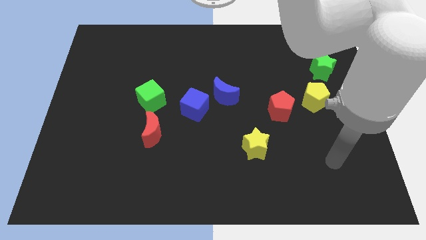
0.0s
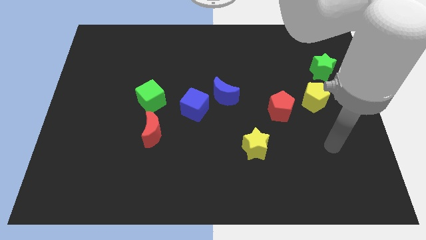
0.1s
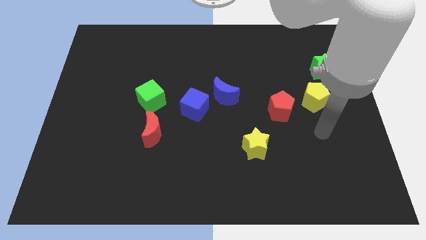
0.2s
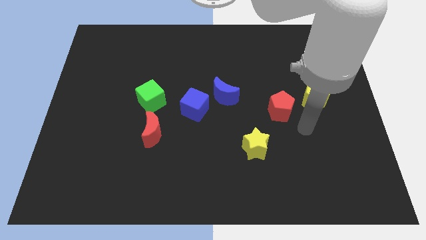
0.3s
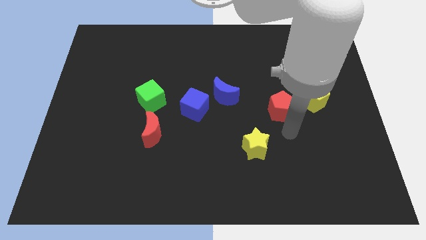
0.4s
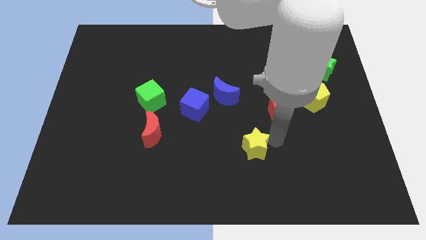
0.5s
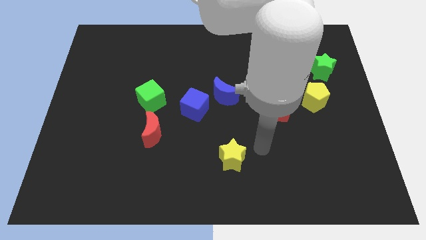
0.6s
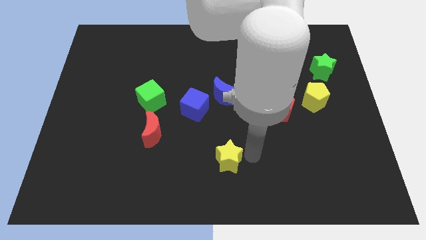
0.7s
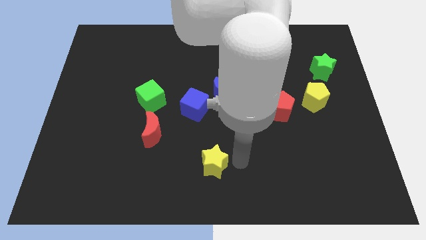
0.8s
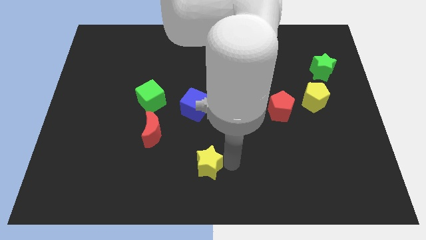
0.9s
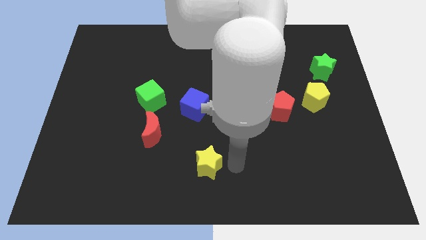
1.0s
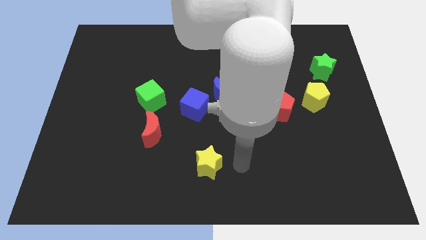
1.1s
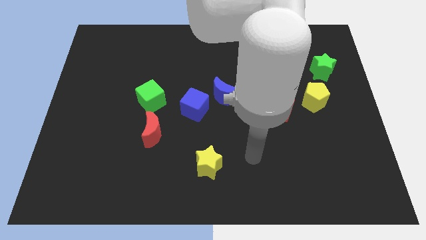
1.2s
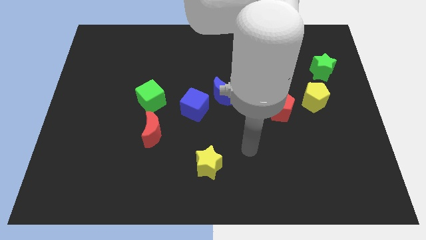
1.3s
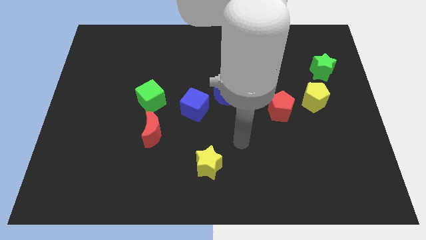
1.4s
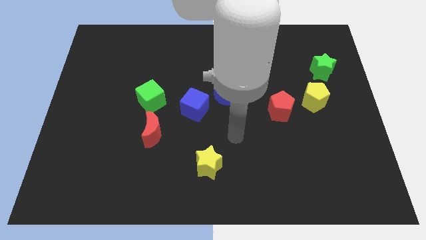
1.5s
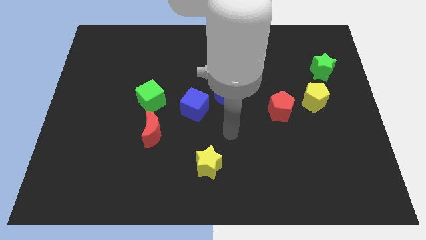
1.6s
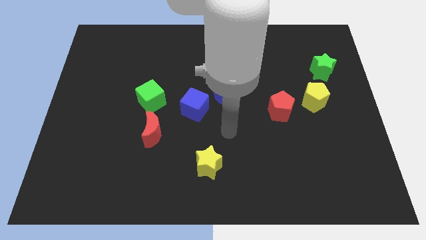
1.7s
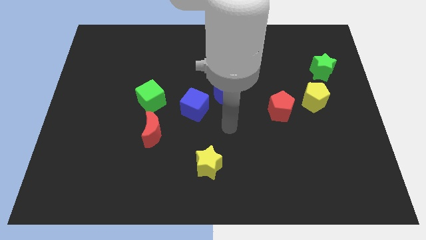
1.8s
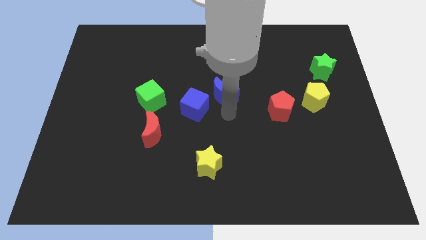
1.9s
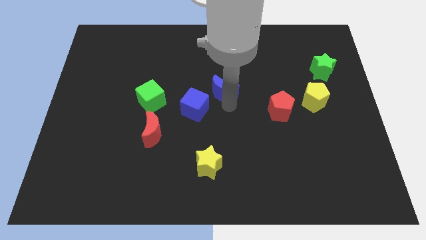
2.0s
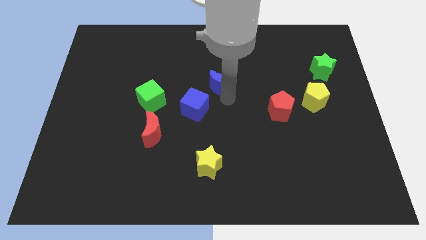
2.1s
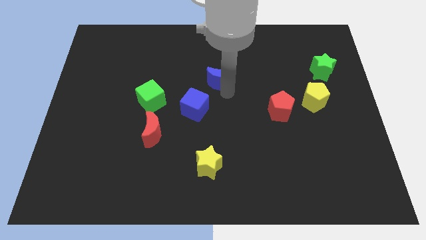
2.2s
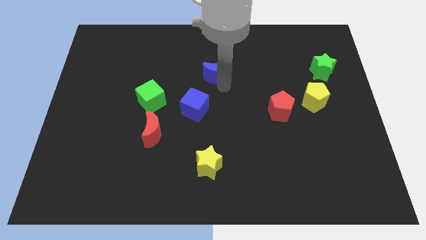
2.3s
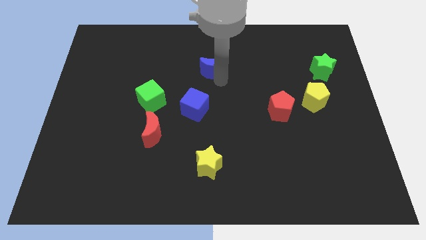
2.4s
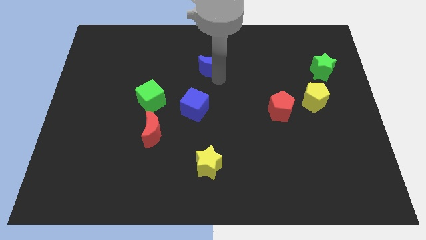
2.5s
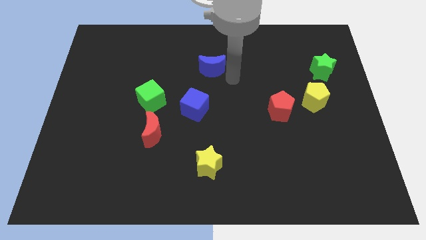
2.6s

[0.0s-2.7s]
push blue crescent slightly towards up

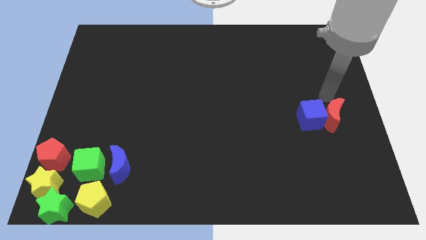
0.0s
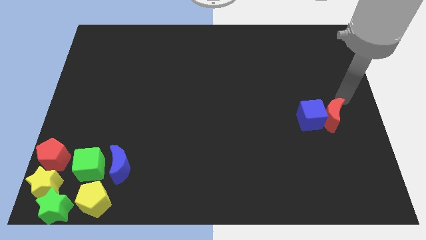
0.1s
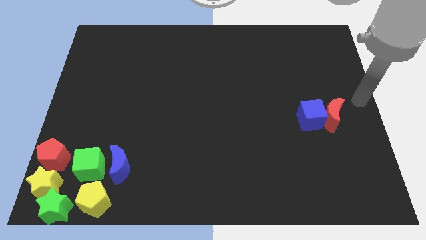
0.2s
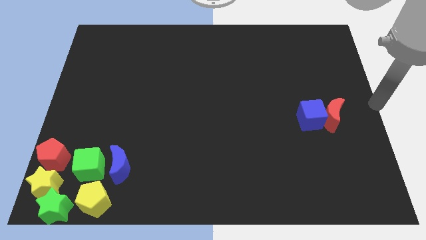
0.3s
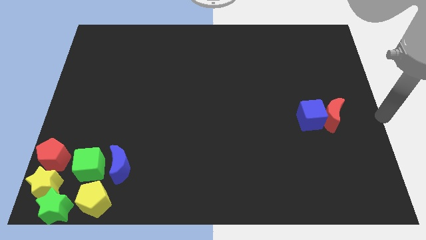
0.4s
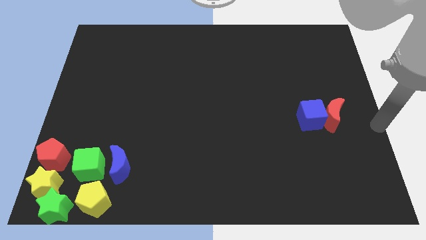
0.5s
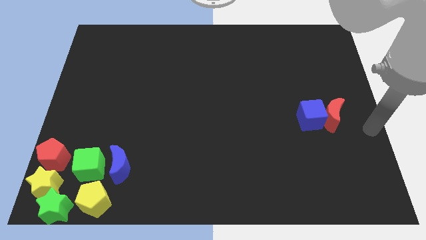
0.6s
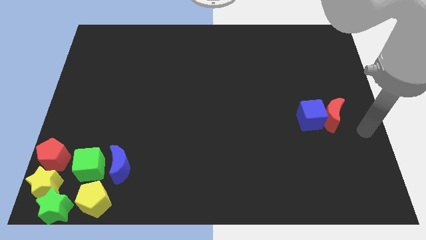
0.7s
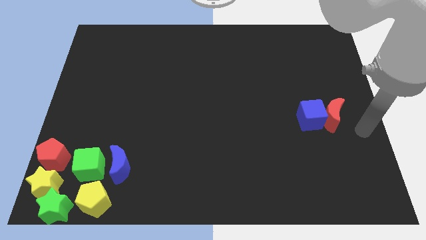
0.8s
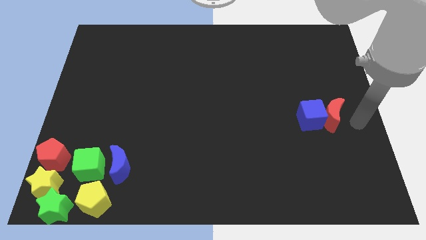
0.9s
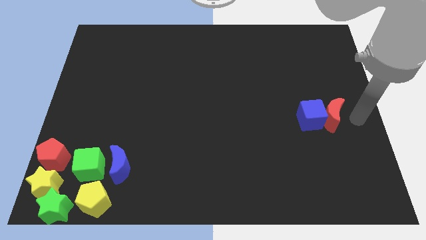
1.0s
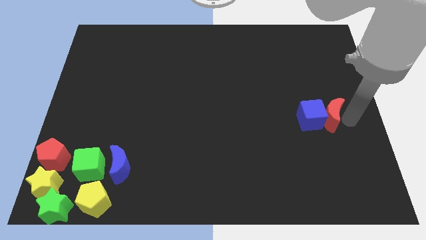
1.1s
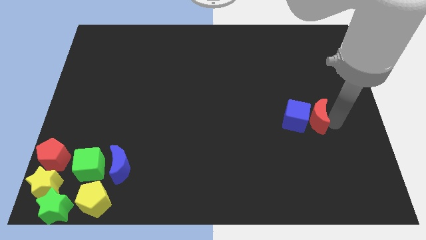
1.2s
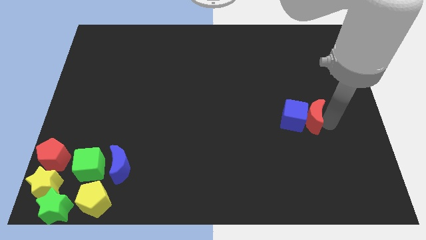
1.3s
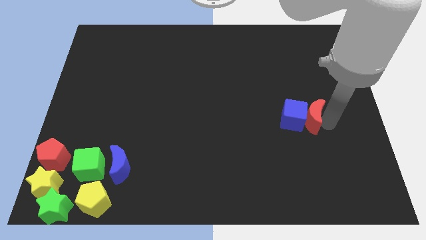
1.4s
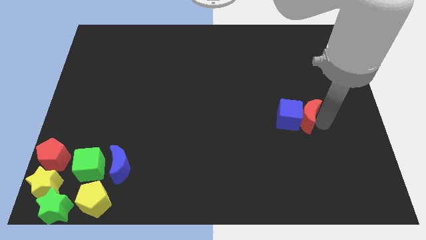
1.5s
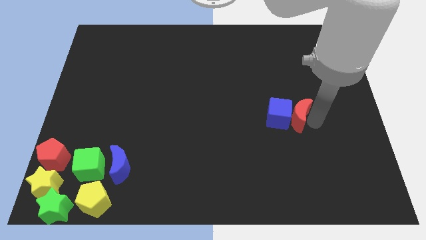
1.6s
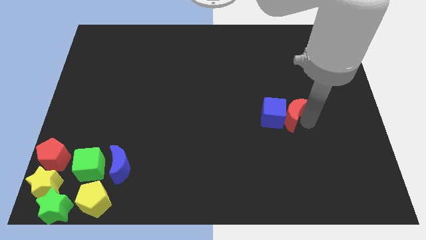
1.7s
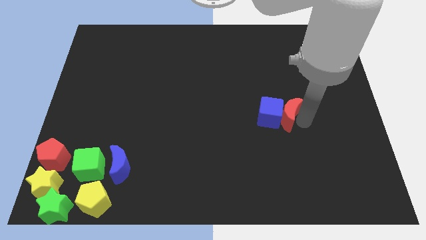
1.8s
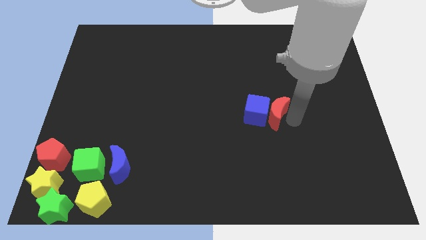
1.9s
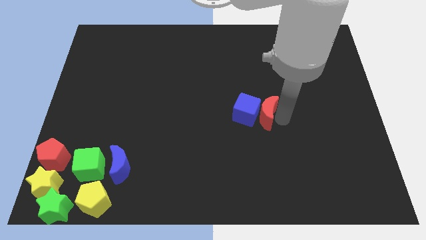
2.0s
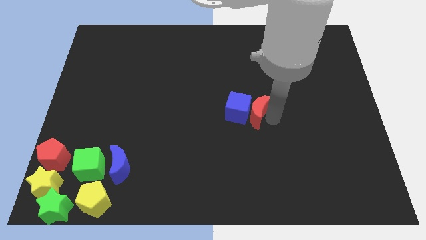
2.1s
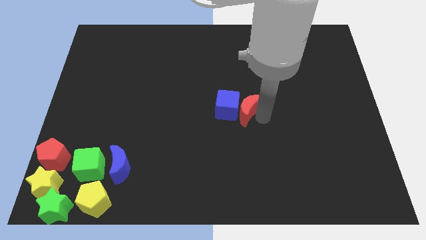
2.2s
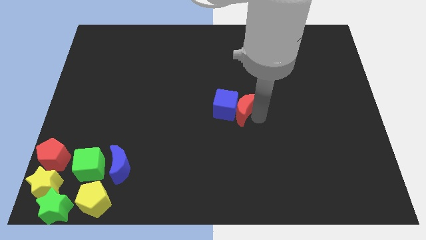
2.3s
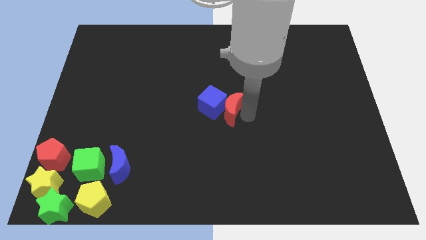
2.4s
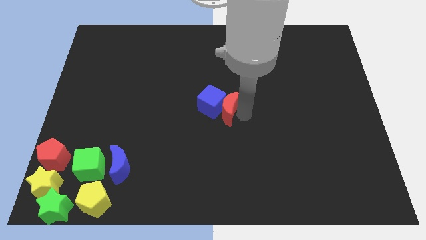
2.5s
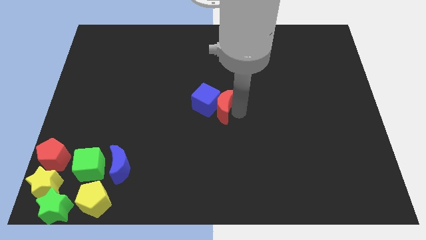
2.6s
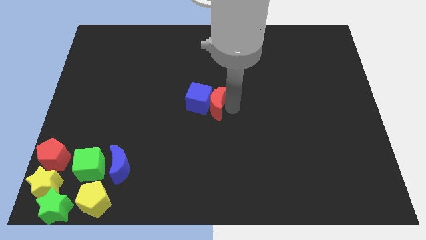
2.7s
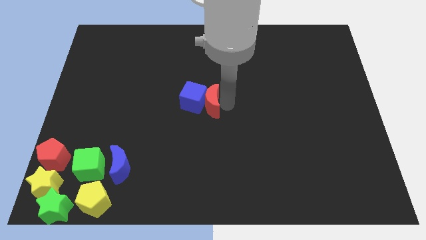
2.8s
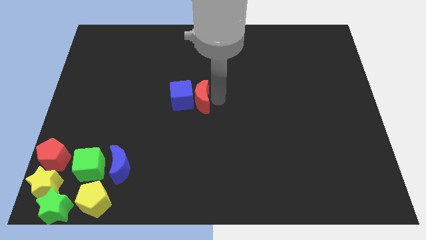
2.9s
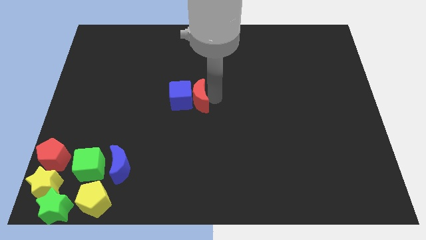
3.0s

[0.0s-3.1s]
push the red crescent and blue cube towards the left side of the board

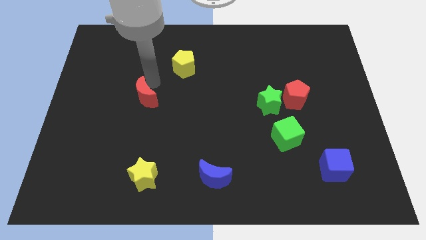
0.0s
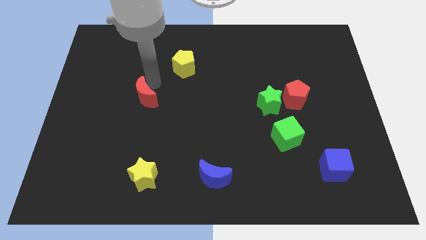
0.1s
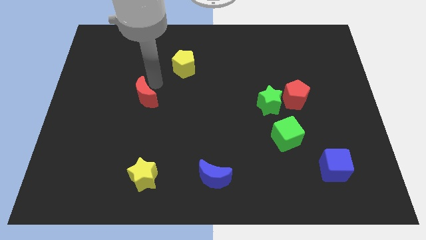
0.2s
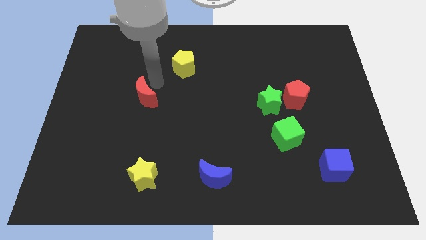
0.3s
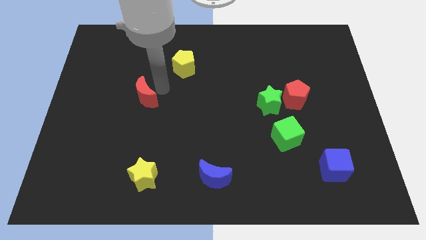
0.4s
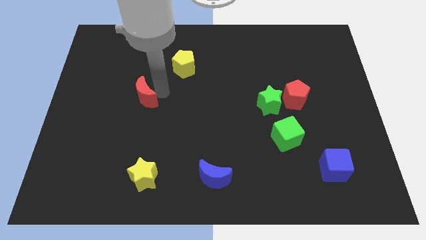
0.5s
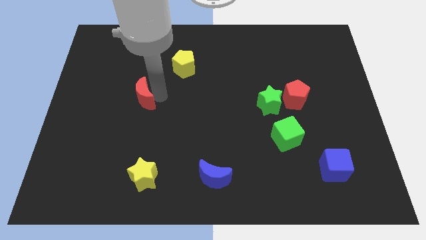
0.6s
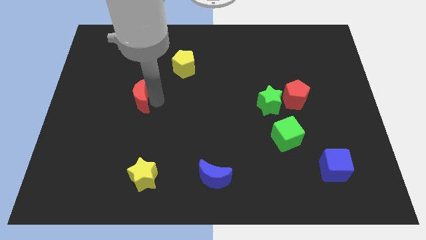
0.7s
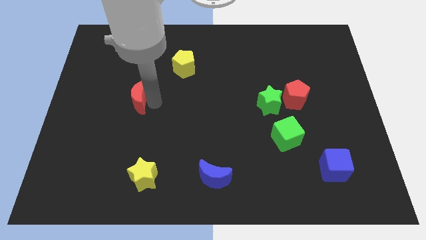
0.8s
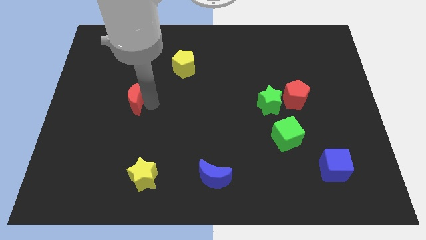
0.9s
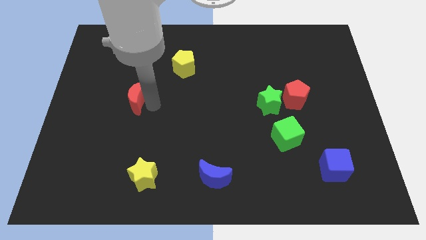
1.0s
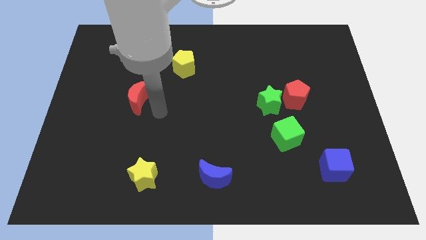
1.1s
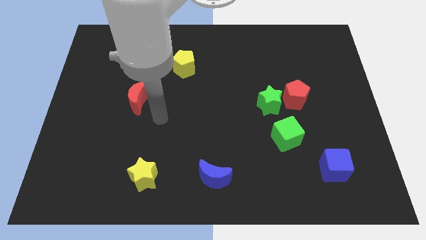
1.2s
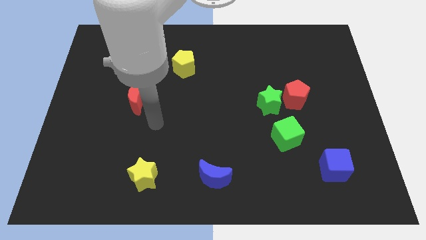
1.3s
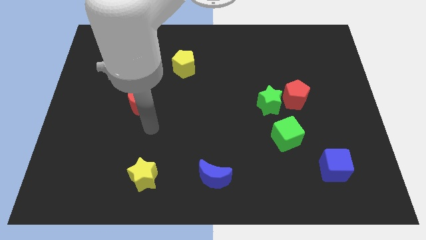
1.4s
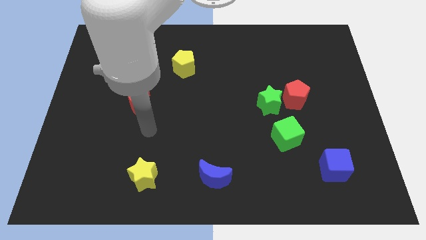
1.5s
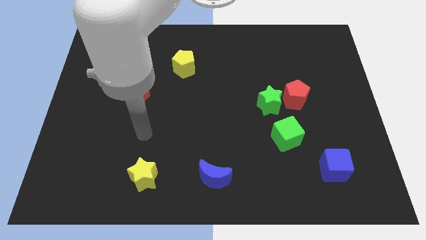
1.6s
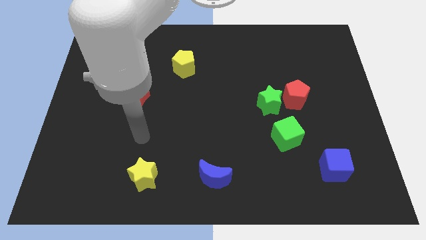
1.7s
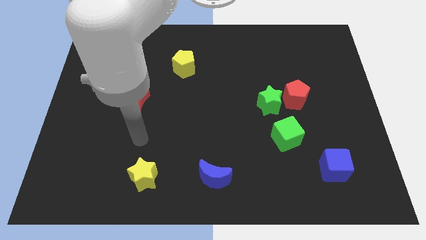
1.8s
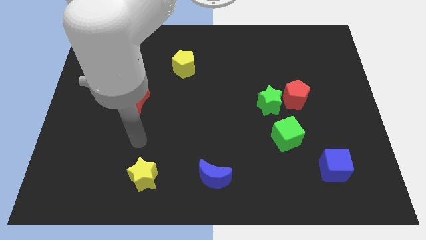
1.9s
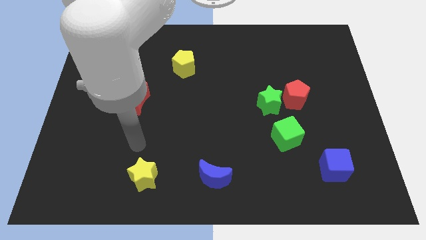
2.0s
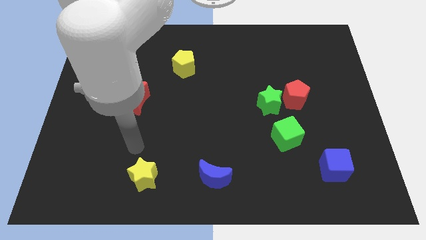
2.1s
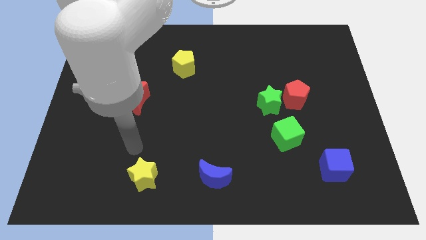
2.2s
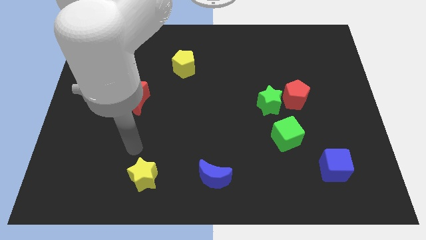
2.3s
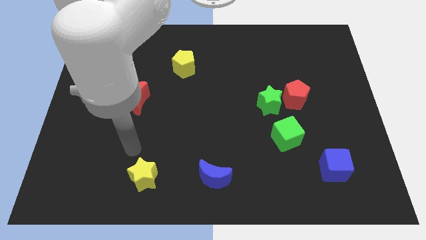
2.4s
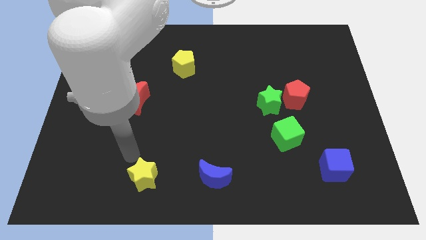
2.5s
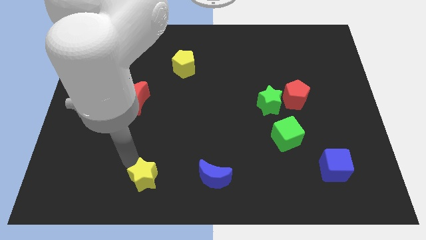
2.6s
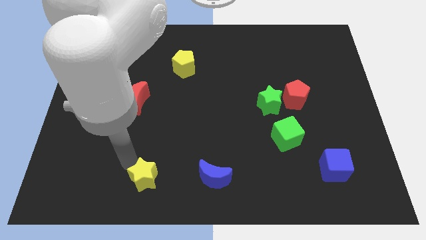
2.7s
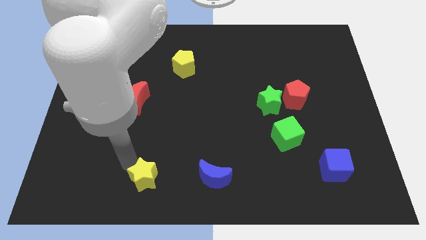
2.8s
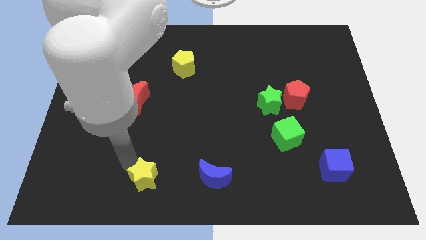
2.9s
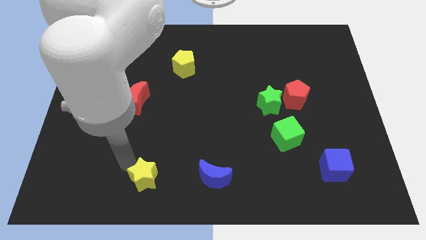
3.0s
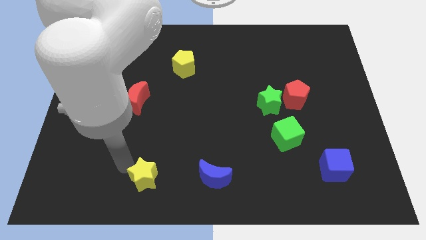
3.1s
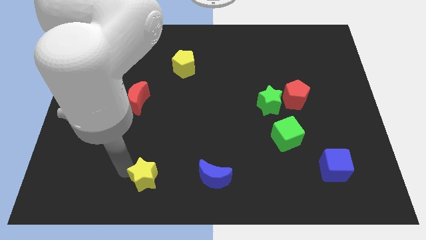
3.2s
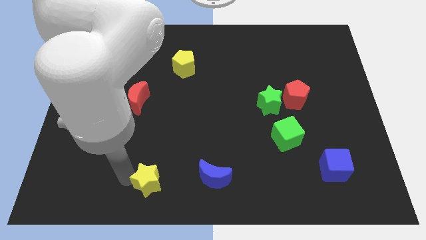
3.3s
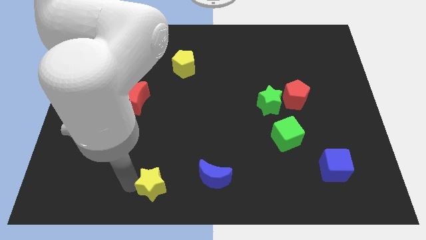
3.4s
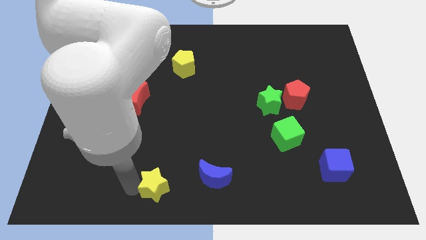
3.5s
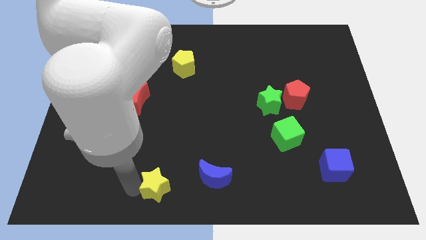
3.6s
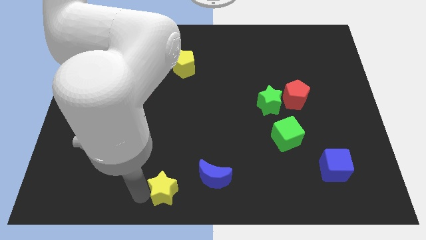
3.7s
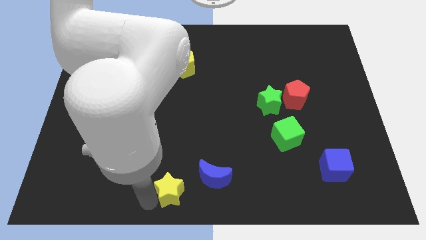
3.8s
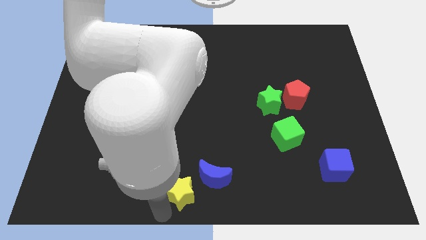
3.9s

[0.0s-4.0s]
move red crescent slightly towards left
